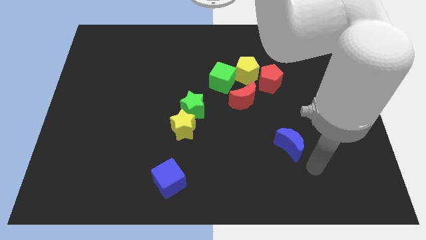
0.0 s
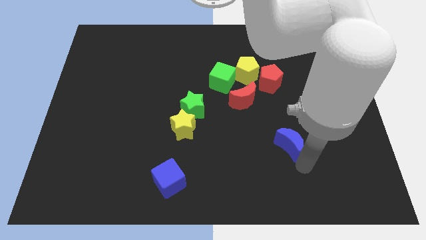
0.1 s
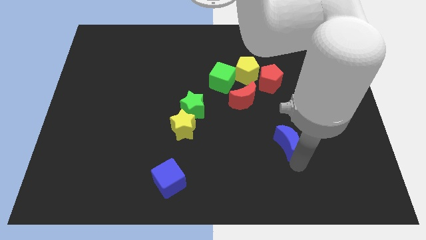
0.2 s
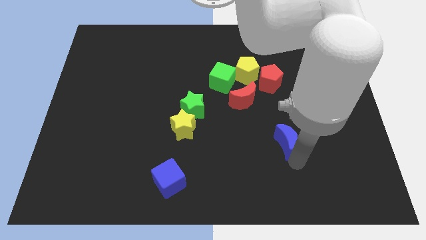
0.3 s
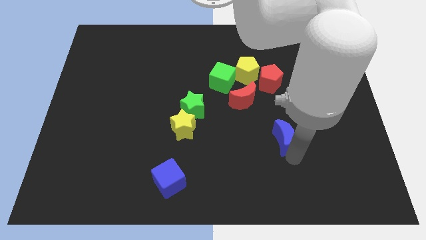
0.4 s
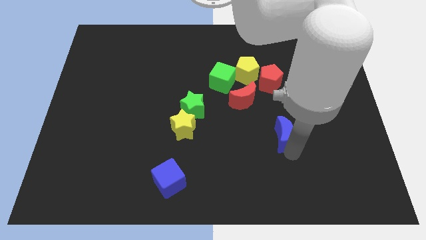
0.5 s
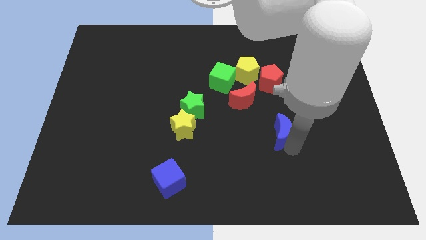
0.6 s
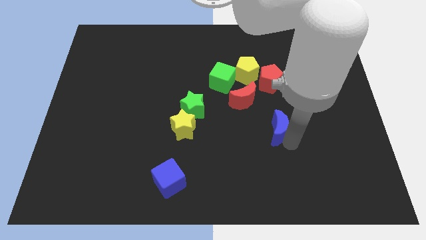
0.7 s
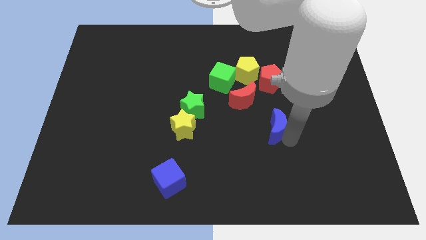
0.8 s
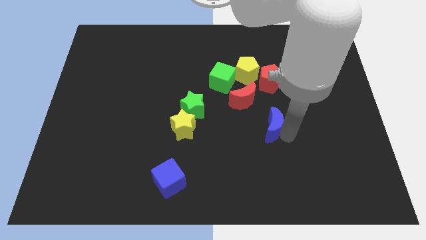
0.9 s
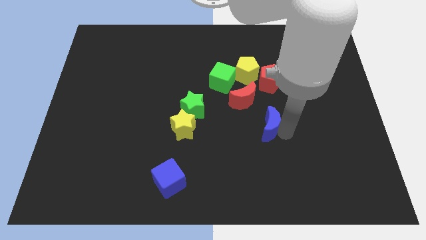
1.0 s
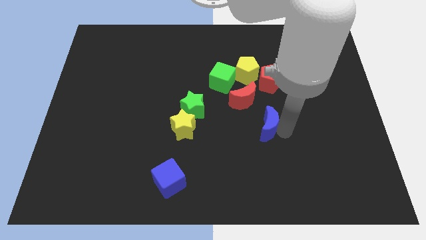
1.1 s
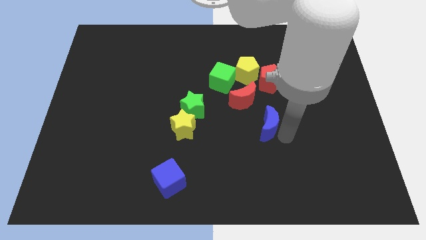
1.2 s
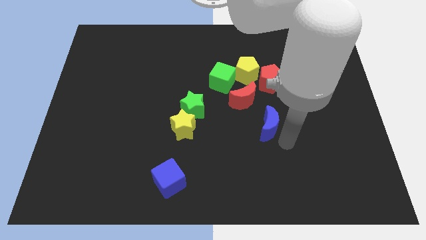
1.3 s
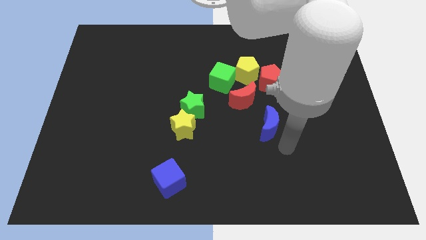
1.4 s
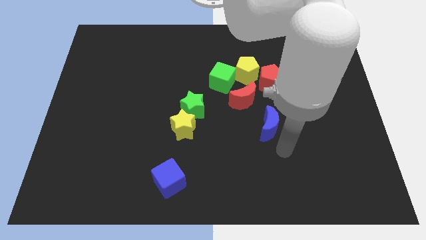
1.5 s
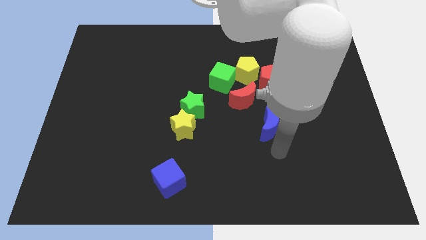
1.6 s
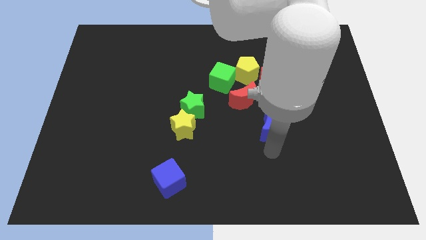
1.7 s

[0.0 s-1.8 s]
push the blue moon slightly to the top of the board

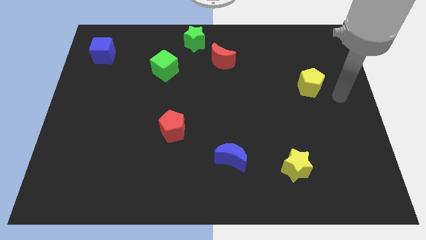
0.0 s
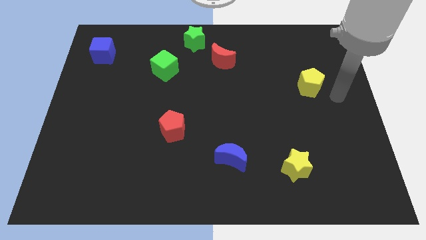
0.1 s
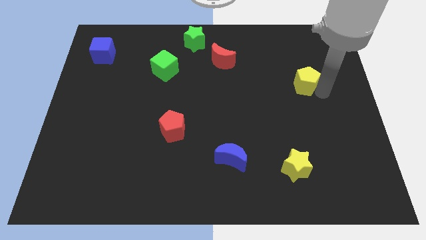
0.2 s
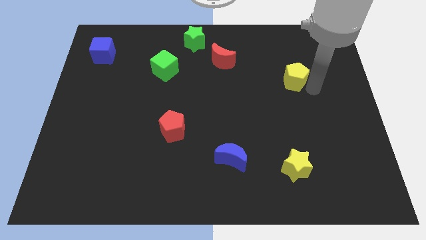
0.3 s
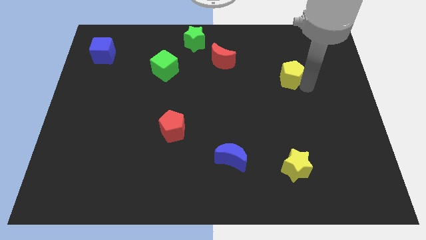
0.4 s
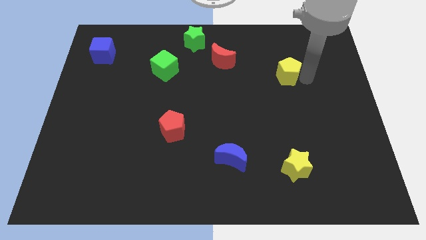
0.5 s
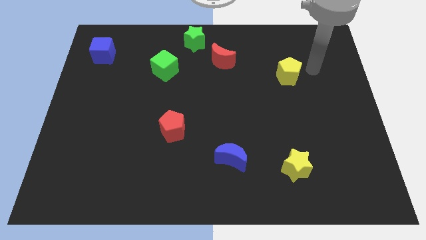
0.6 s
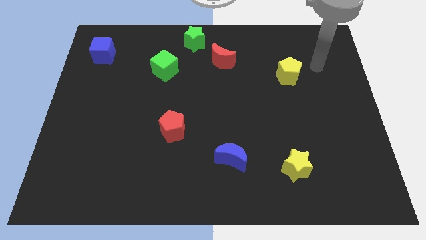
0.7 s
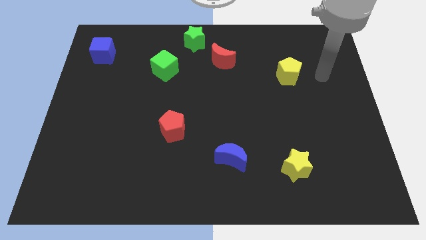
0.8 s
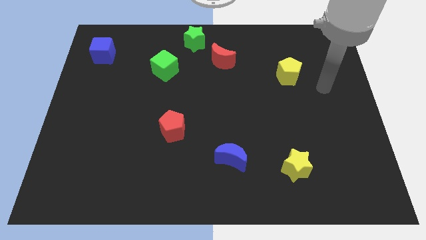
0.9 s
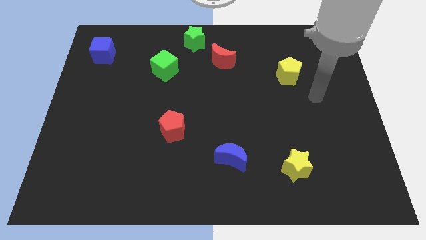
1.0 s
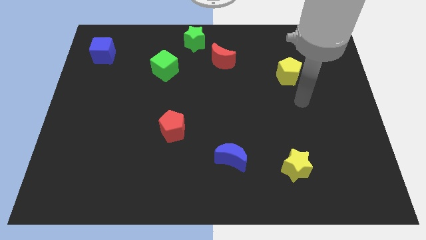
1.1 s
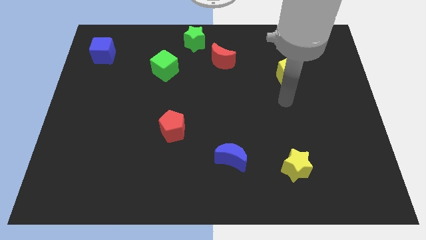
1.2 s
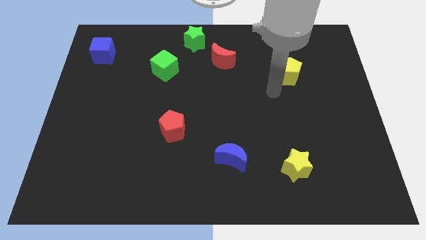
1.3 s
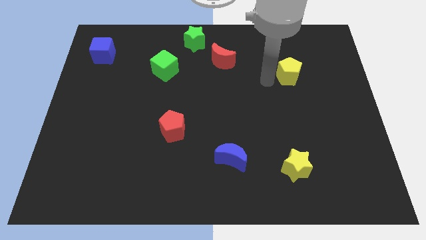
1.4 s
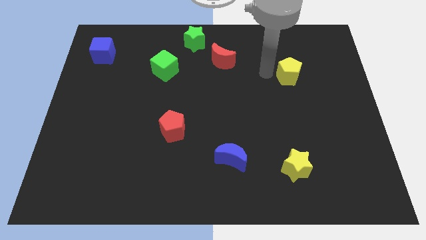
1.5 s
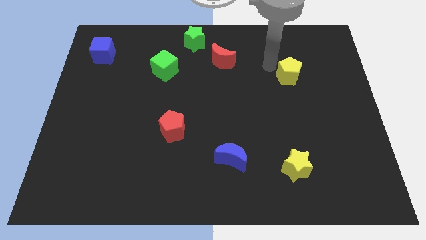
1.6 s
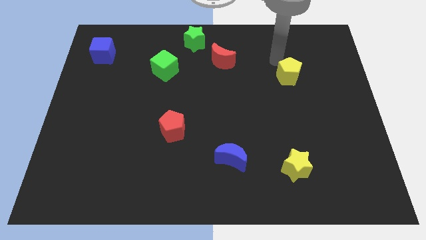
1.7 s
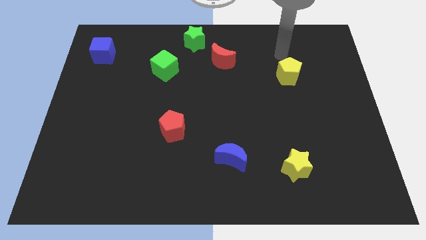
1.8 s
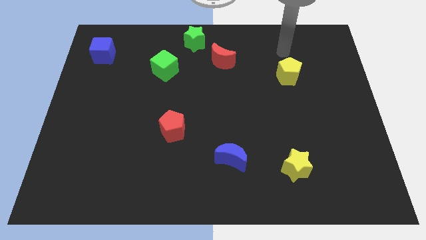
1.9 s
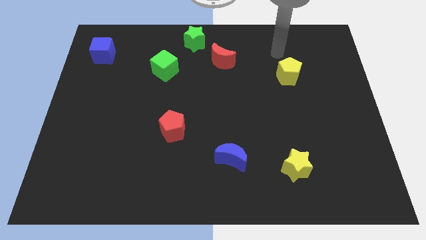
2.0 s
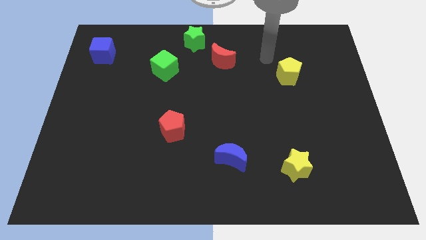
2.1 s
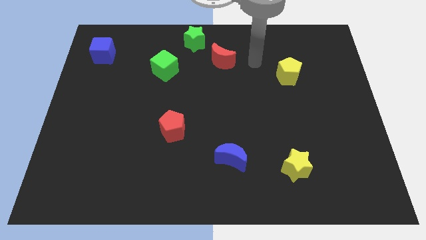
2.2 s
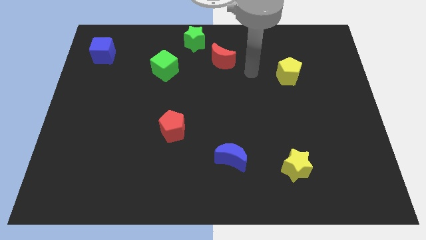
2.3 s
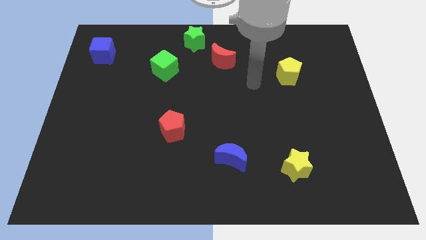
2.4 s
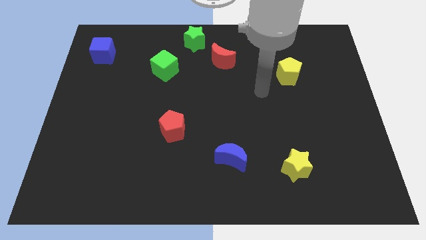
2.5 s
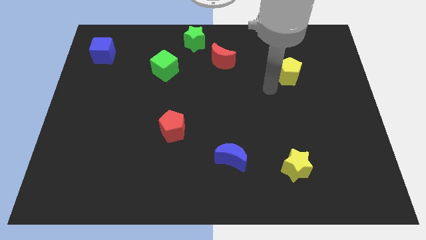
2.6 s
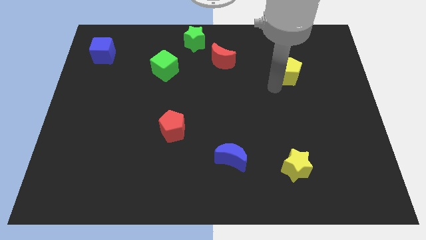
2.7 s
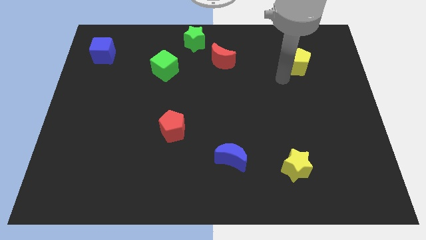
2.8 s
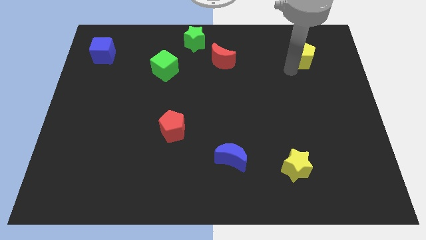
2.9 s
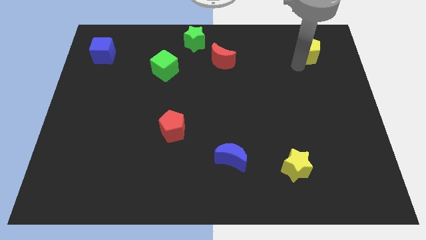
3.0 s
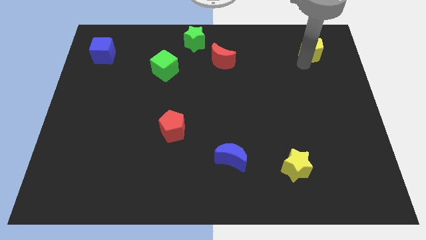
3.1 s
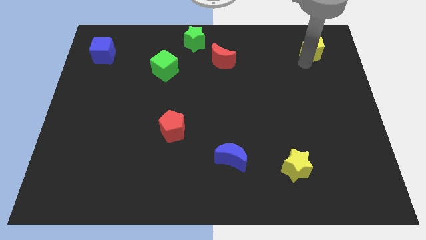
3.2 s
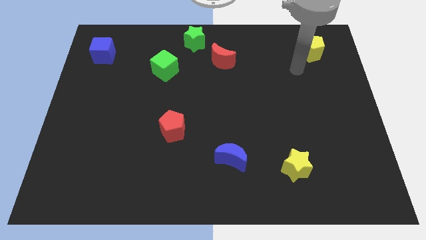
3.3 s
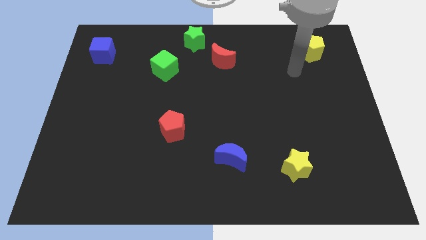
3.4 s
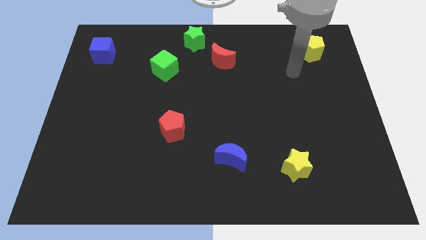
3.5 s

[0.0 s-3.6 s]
move the yellow pentagon to the top right corner of the board

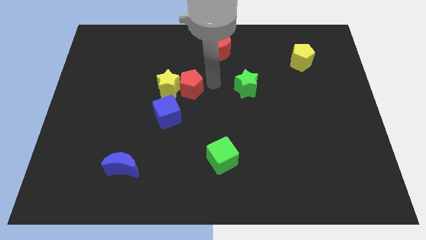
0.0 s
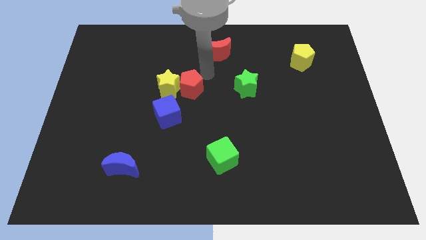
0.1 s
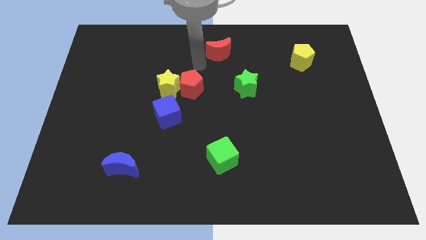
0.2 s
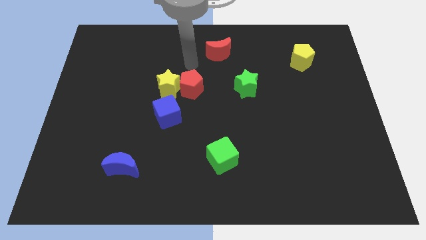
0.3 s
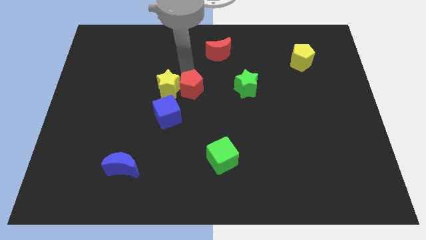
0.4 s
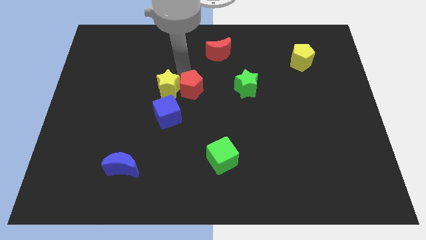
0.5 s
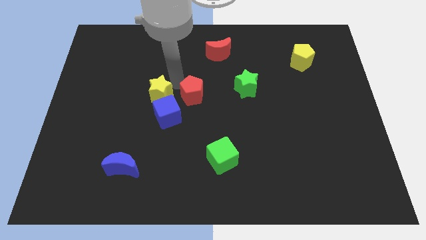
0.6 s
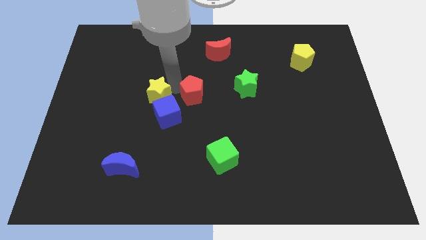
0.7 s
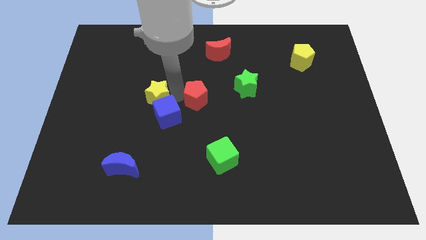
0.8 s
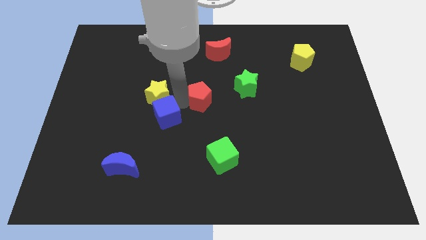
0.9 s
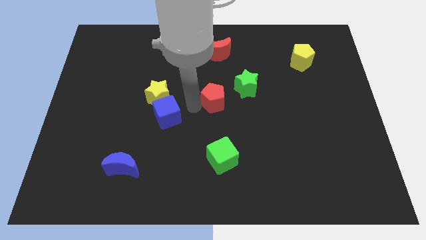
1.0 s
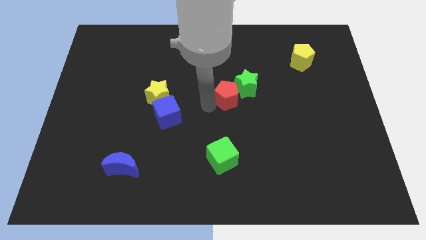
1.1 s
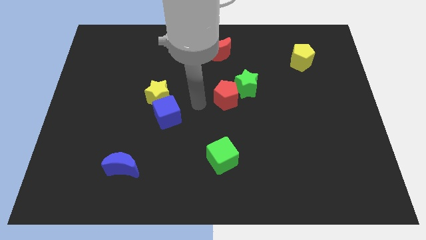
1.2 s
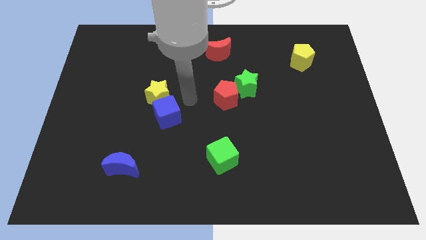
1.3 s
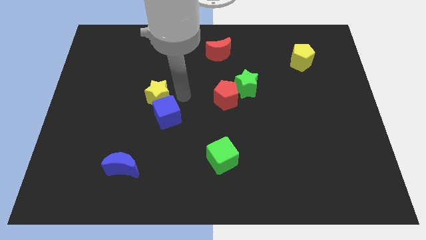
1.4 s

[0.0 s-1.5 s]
separate the yellow star and the red pentagon

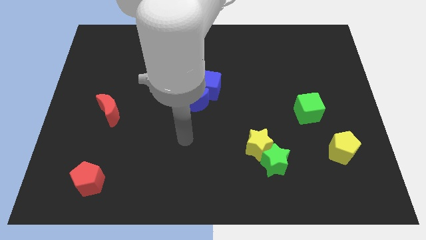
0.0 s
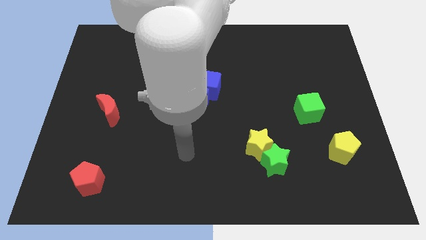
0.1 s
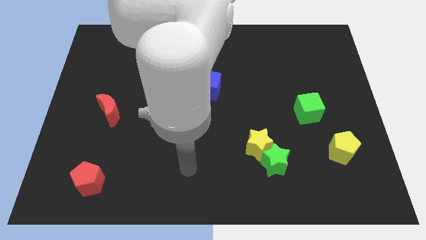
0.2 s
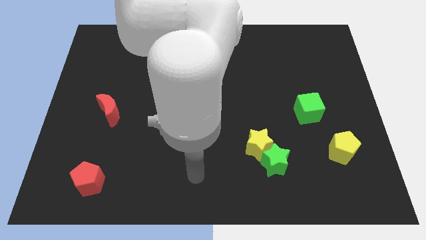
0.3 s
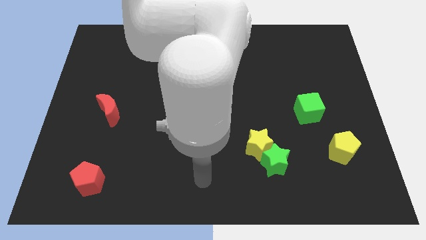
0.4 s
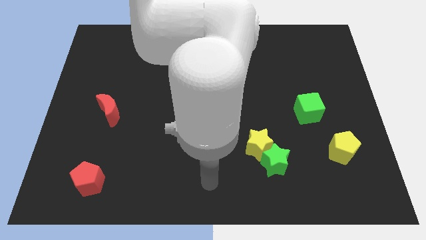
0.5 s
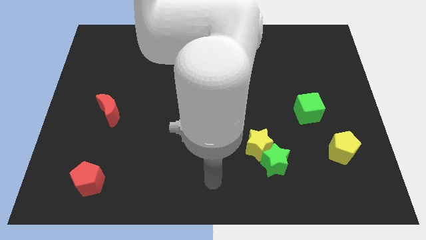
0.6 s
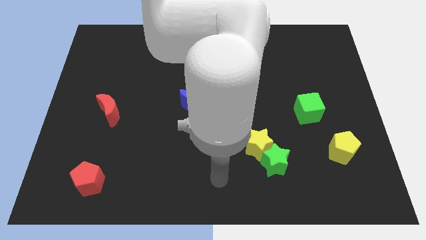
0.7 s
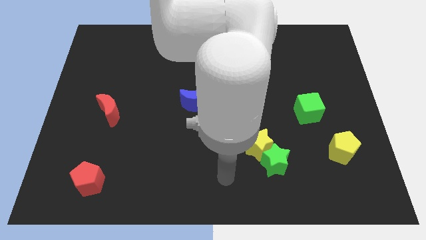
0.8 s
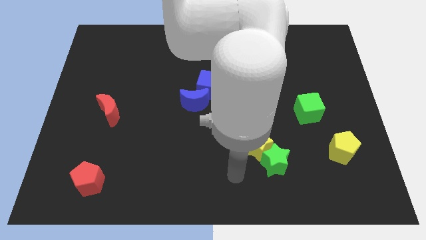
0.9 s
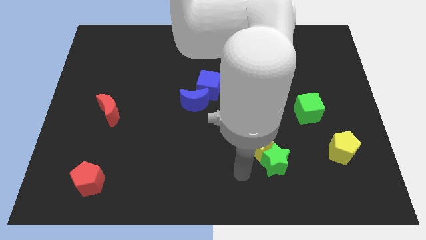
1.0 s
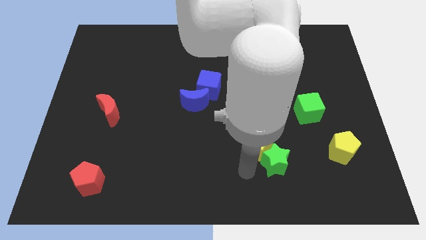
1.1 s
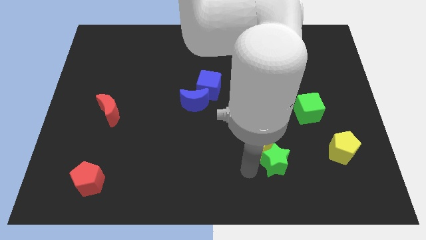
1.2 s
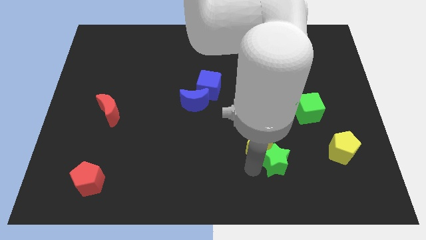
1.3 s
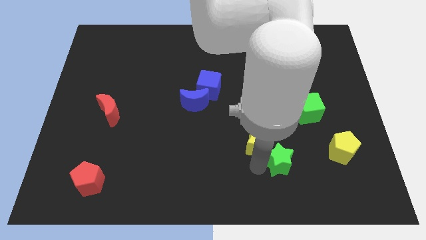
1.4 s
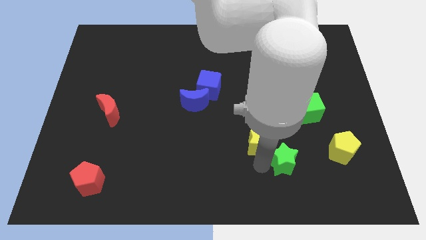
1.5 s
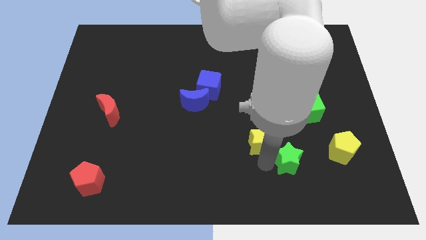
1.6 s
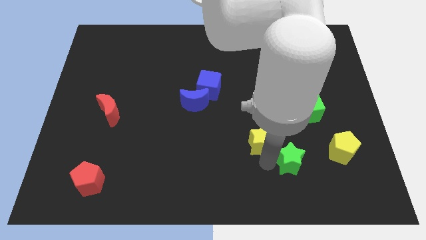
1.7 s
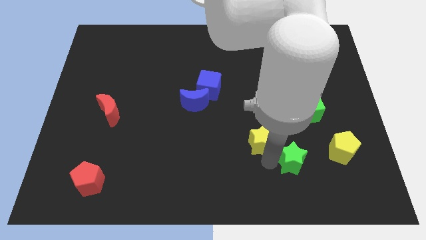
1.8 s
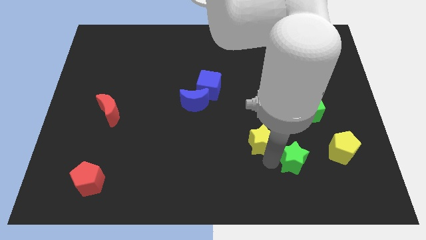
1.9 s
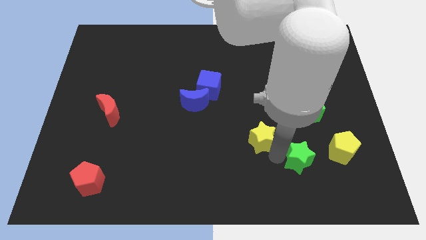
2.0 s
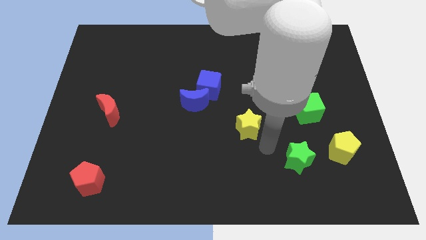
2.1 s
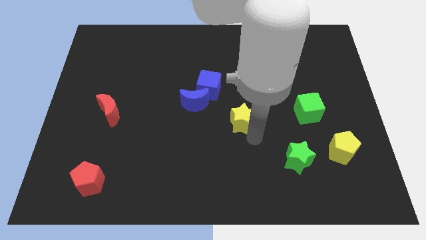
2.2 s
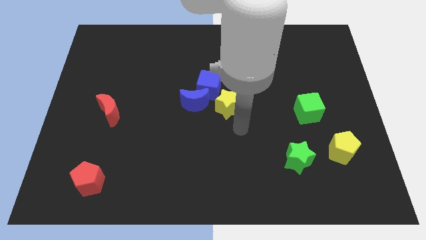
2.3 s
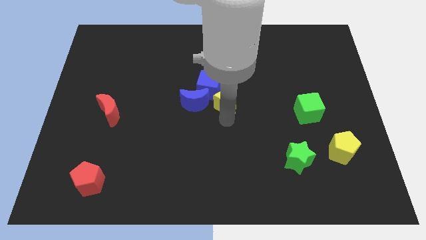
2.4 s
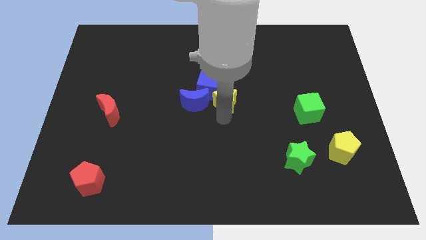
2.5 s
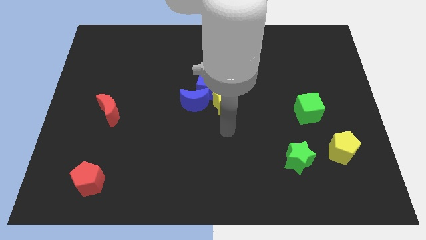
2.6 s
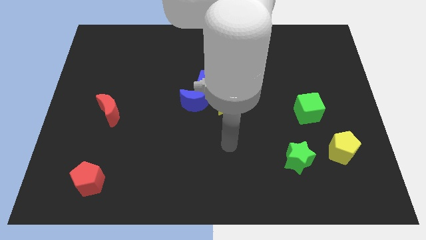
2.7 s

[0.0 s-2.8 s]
push the yellow star into the blue blocks
